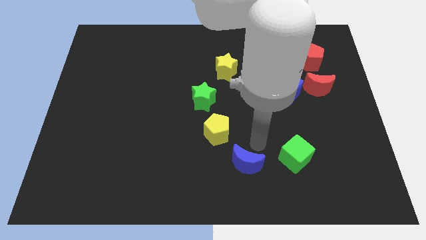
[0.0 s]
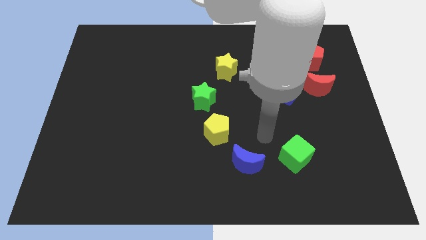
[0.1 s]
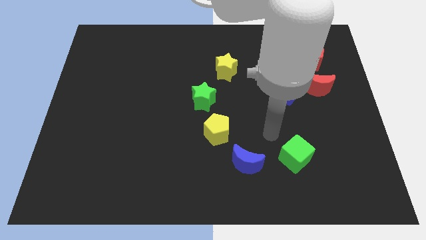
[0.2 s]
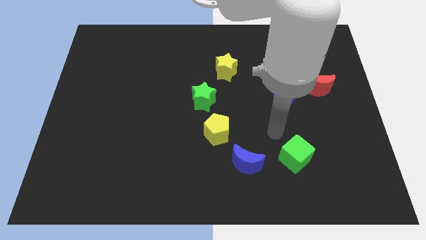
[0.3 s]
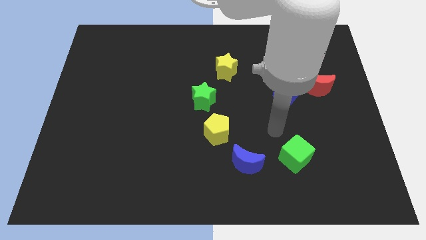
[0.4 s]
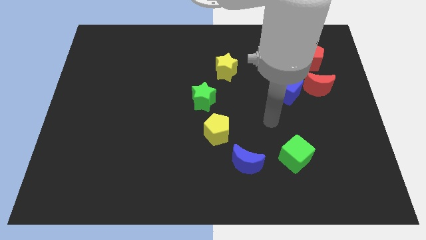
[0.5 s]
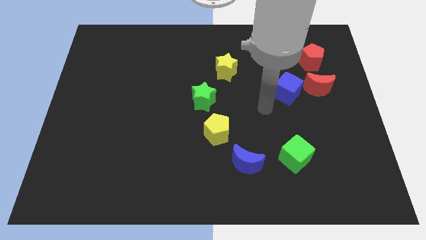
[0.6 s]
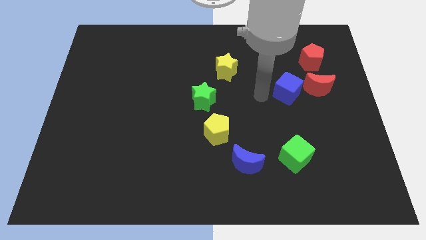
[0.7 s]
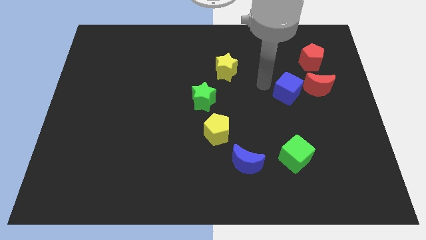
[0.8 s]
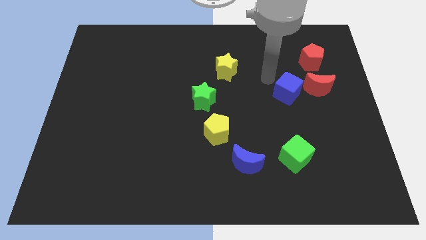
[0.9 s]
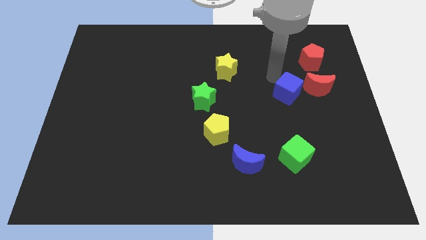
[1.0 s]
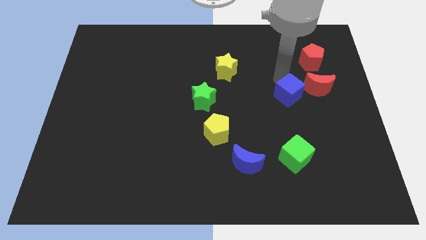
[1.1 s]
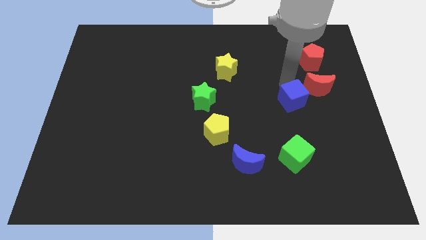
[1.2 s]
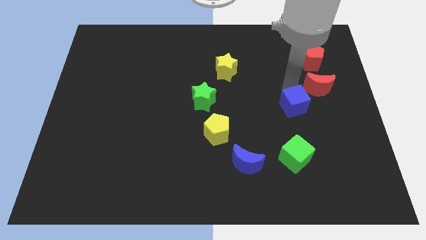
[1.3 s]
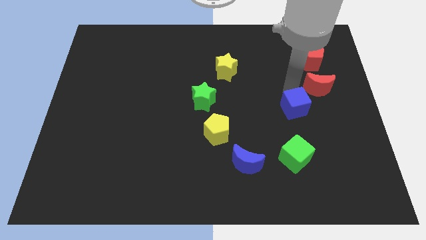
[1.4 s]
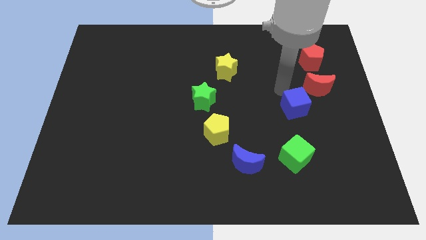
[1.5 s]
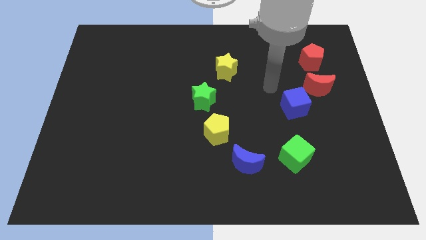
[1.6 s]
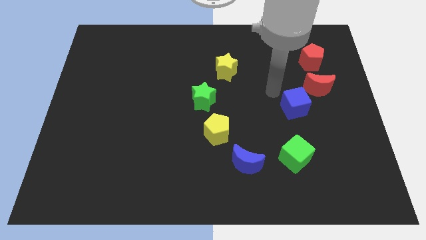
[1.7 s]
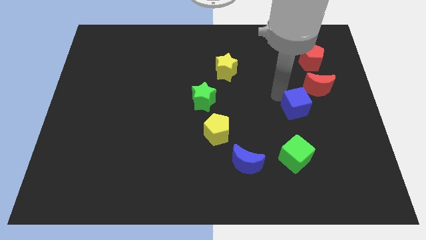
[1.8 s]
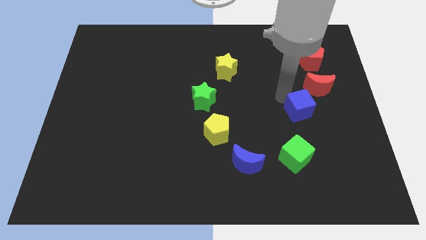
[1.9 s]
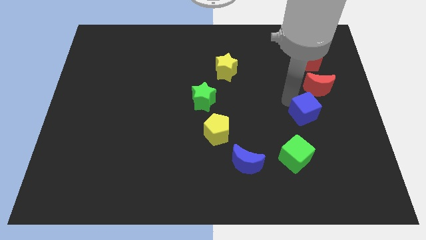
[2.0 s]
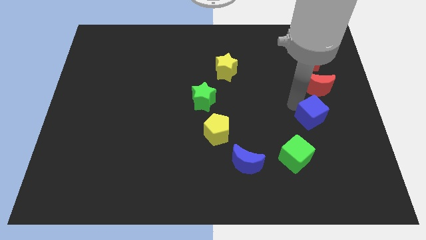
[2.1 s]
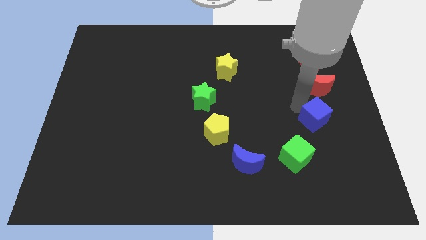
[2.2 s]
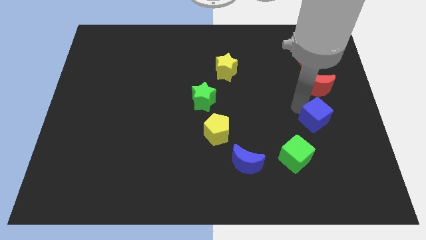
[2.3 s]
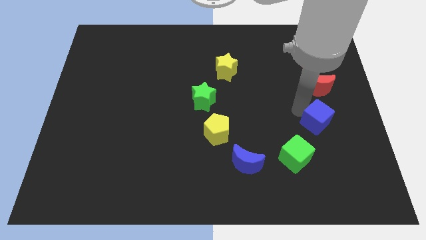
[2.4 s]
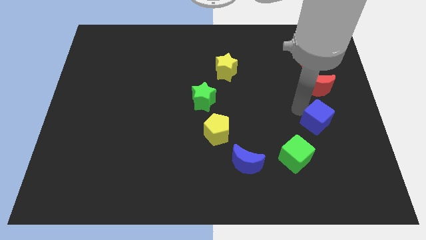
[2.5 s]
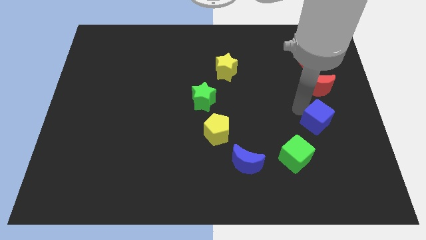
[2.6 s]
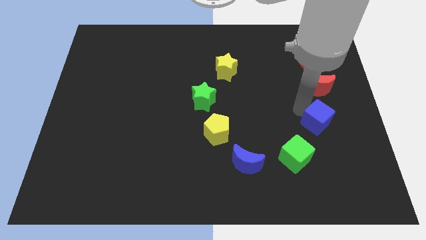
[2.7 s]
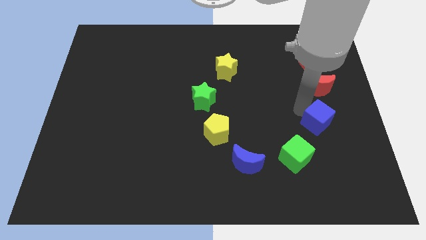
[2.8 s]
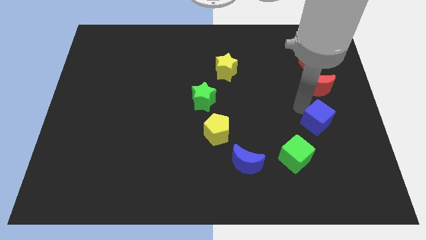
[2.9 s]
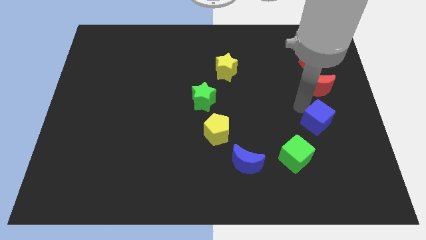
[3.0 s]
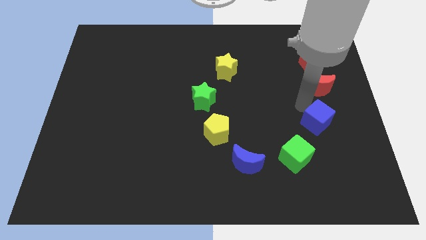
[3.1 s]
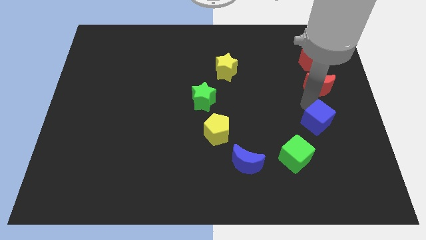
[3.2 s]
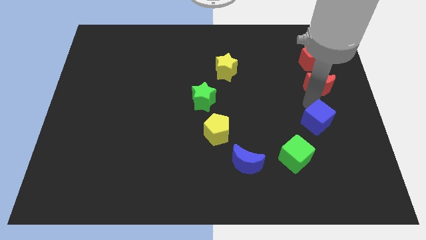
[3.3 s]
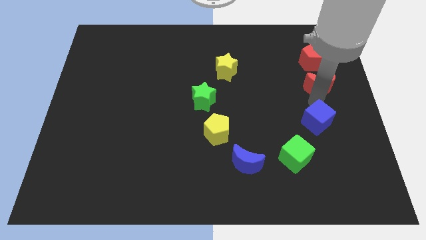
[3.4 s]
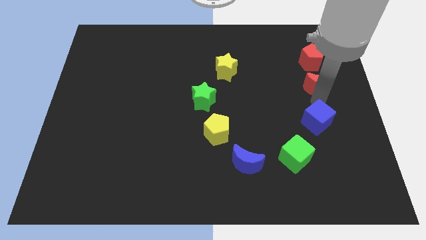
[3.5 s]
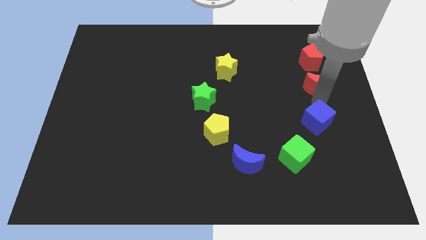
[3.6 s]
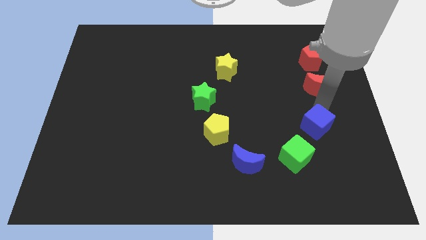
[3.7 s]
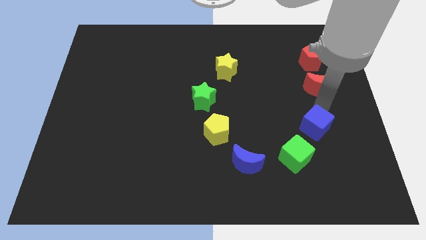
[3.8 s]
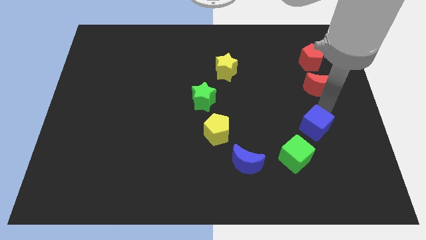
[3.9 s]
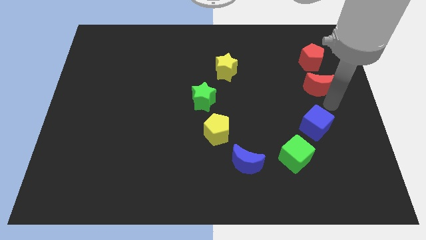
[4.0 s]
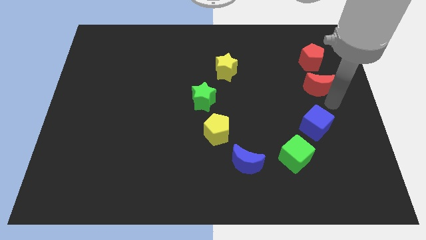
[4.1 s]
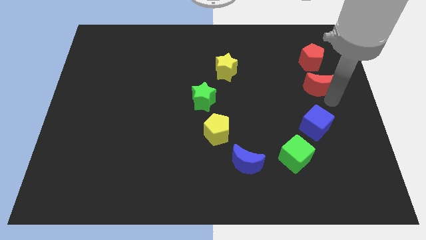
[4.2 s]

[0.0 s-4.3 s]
place the blue cube above the green cube

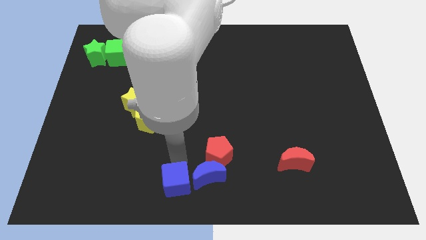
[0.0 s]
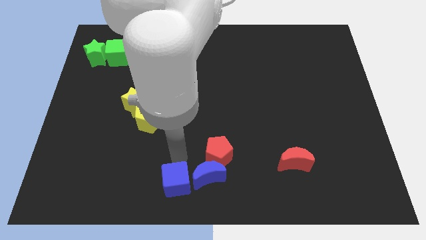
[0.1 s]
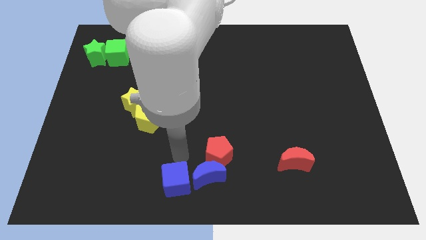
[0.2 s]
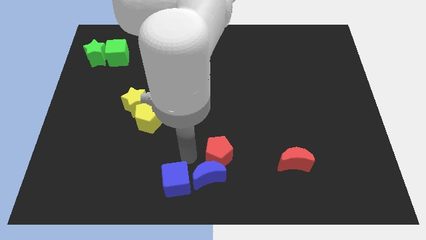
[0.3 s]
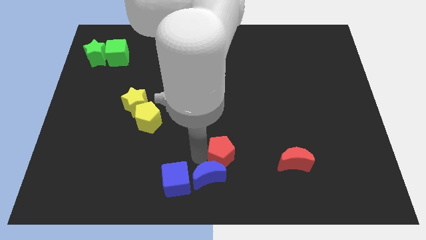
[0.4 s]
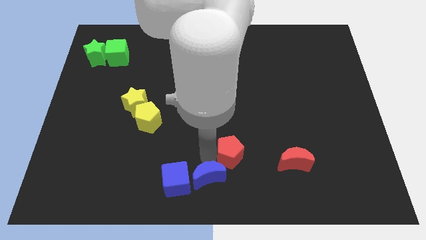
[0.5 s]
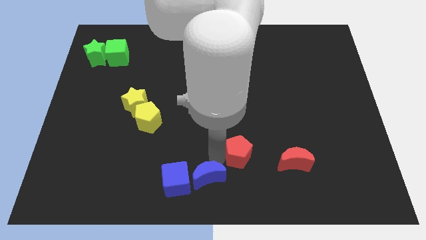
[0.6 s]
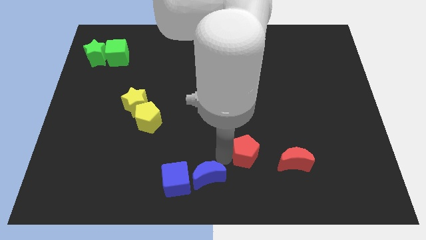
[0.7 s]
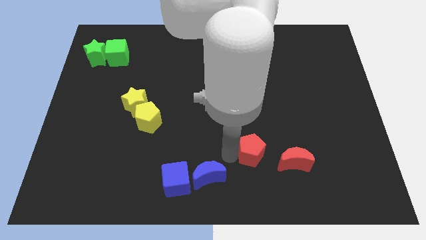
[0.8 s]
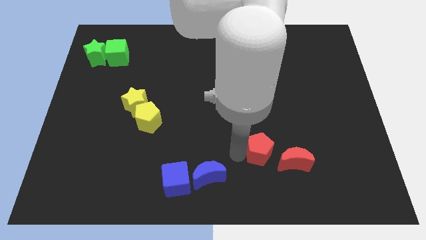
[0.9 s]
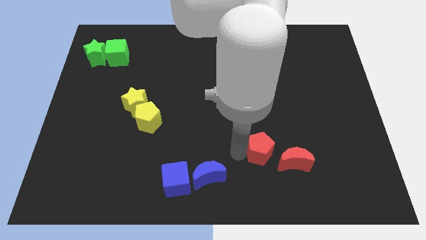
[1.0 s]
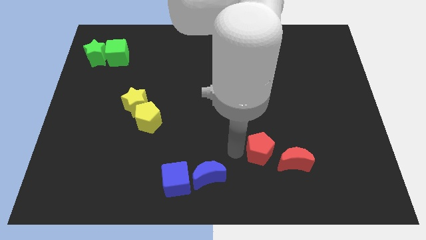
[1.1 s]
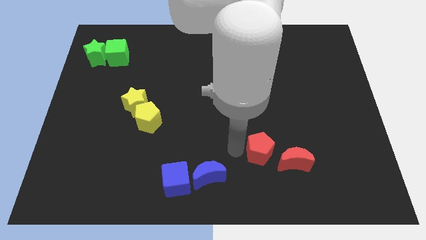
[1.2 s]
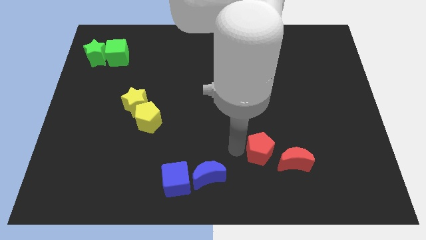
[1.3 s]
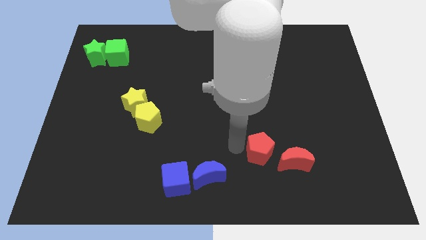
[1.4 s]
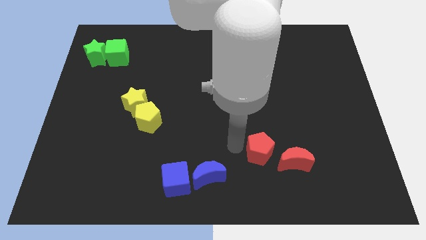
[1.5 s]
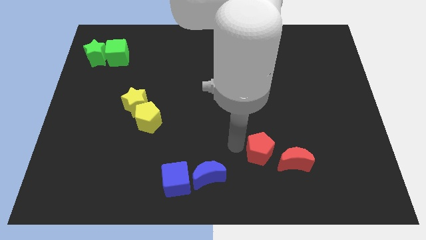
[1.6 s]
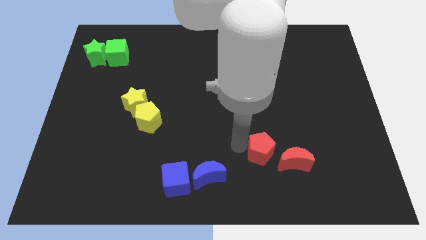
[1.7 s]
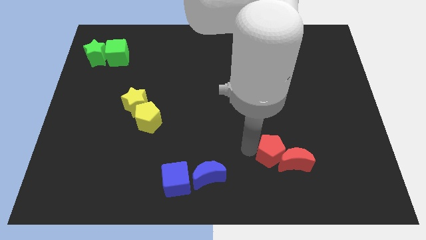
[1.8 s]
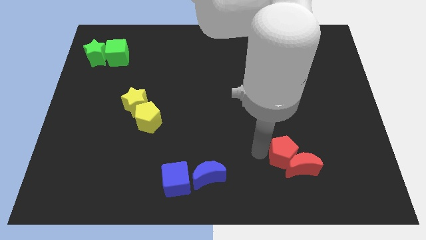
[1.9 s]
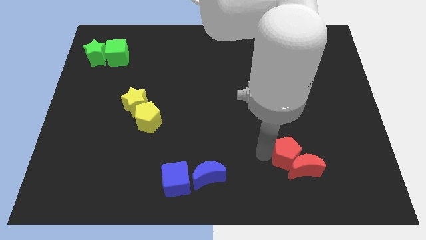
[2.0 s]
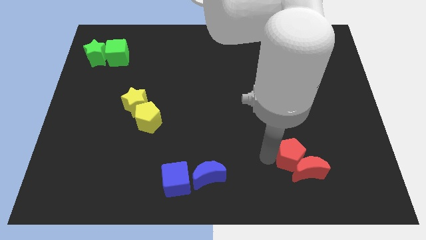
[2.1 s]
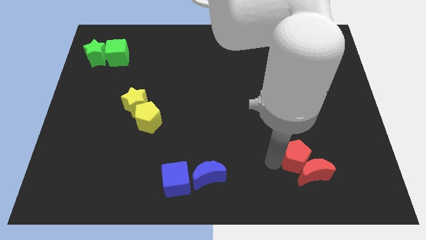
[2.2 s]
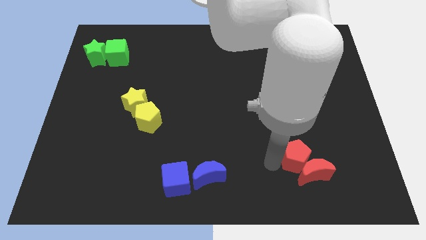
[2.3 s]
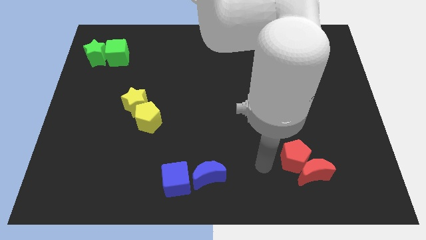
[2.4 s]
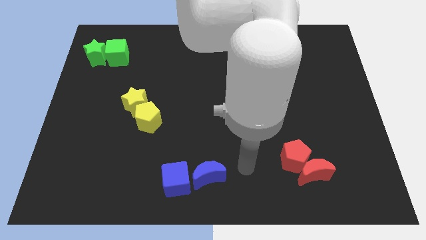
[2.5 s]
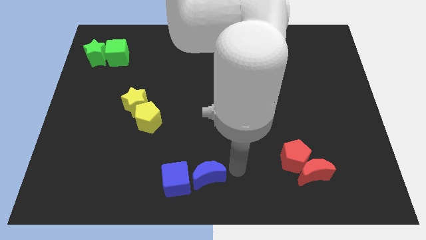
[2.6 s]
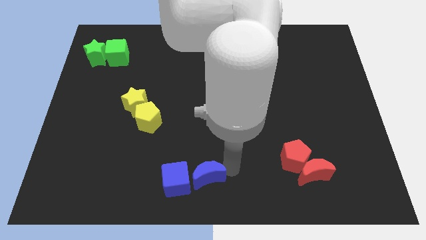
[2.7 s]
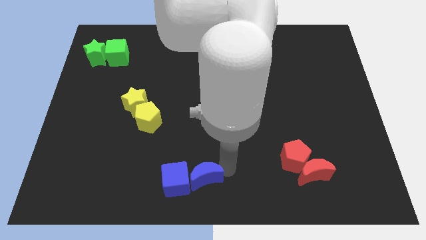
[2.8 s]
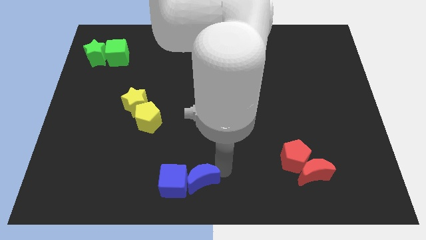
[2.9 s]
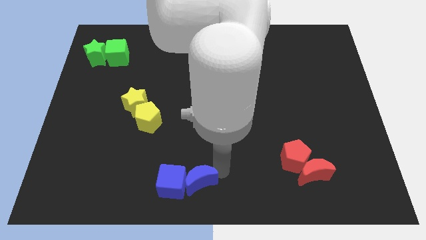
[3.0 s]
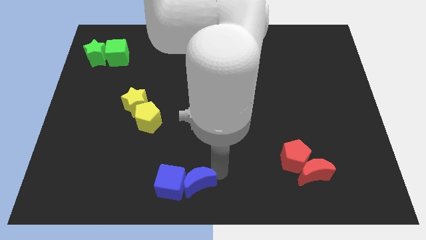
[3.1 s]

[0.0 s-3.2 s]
move red pentagon in to red moon

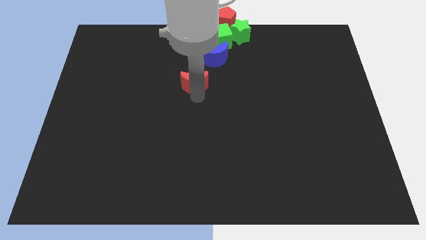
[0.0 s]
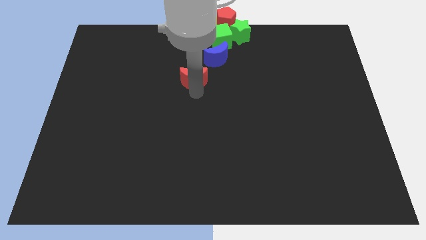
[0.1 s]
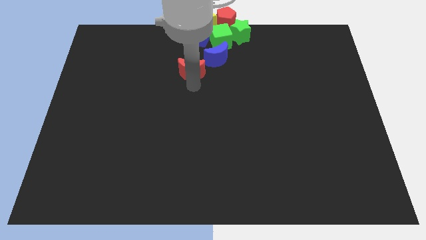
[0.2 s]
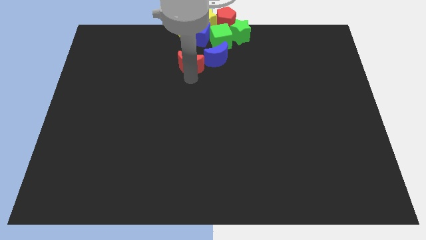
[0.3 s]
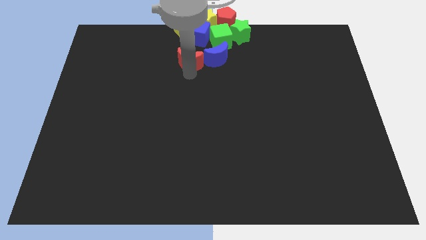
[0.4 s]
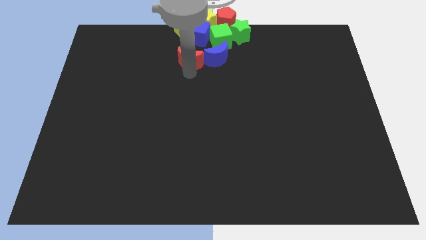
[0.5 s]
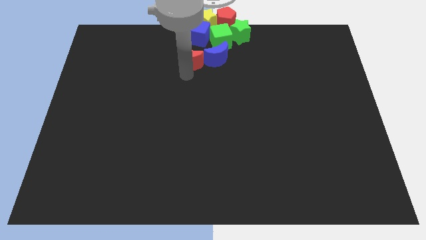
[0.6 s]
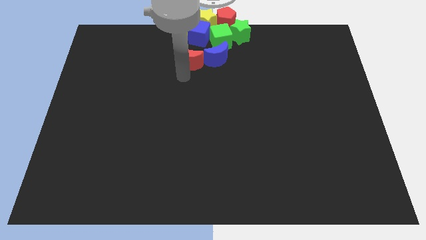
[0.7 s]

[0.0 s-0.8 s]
move the red crescent left to the blue crescent

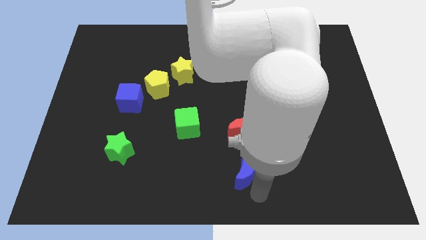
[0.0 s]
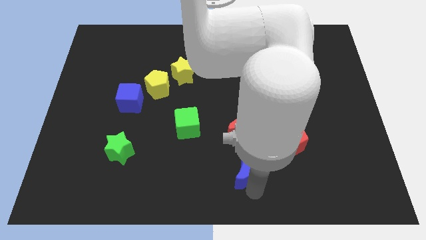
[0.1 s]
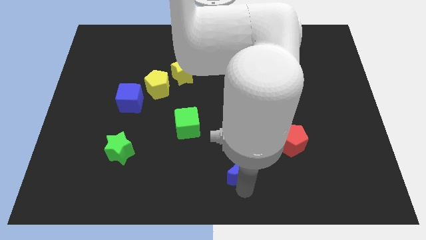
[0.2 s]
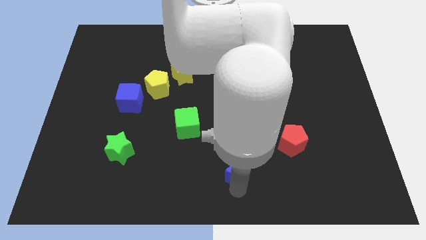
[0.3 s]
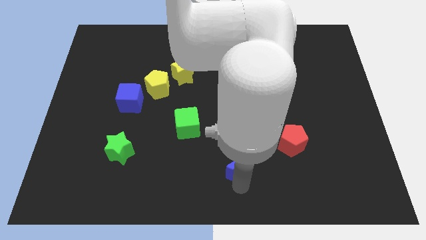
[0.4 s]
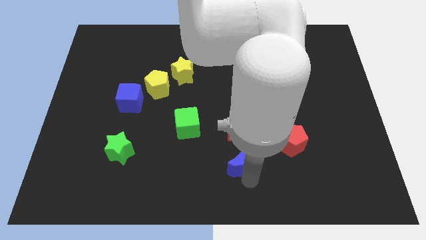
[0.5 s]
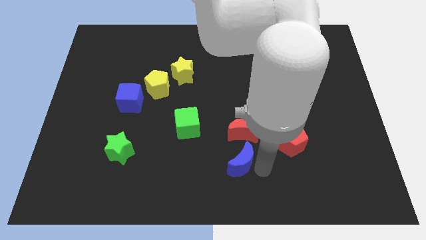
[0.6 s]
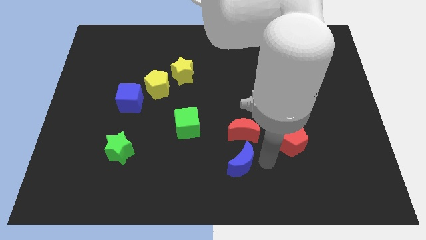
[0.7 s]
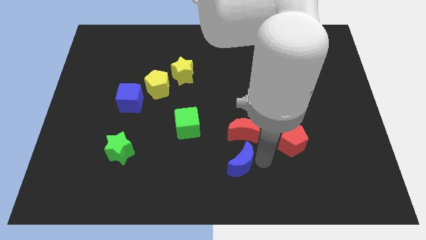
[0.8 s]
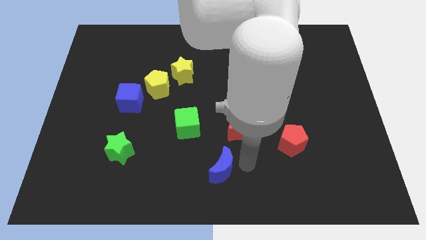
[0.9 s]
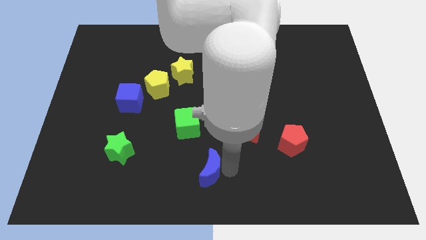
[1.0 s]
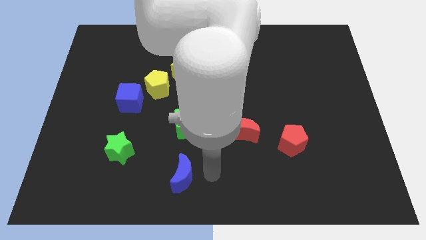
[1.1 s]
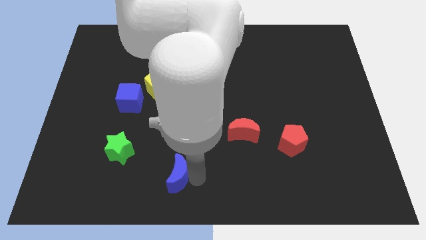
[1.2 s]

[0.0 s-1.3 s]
push the blue crescent to the bottom of the green cube
